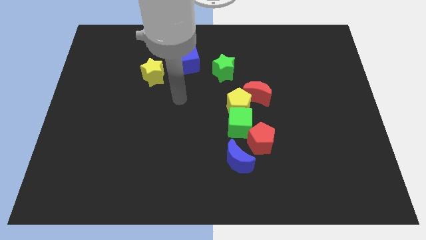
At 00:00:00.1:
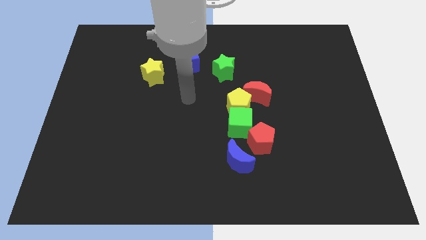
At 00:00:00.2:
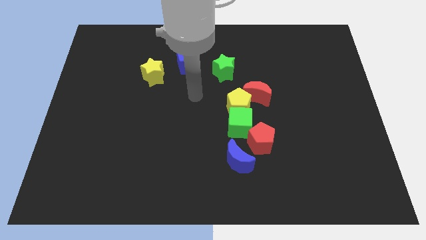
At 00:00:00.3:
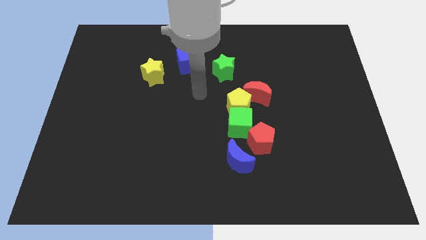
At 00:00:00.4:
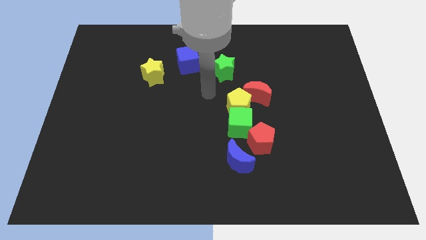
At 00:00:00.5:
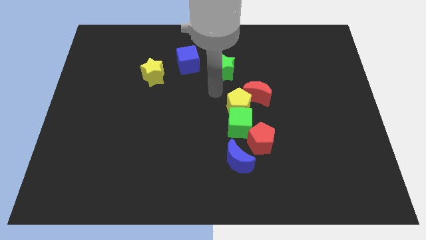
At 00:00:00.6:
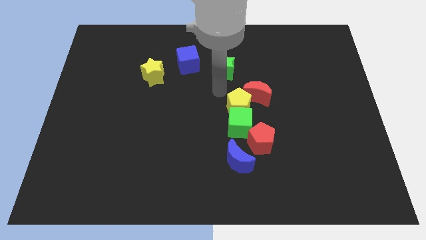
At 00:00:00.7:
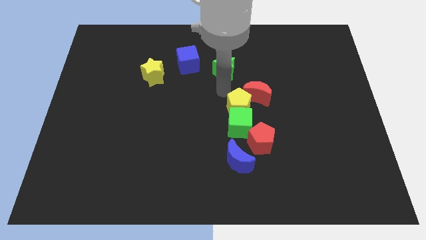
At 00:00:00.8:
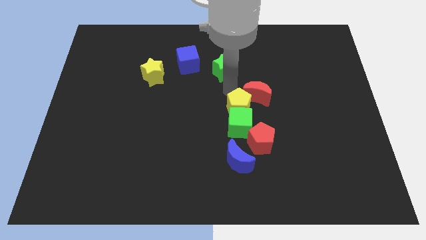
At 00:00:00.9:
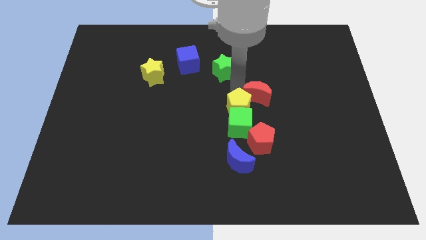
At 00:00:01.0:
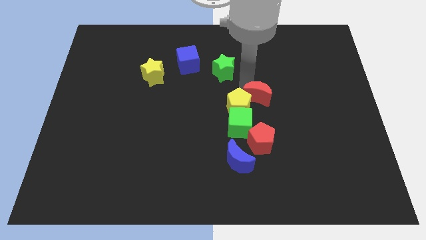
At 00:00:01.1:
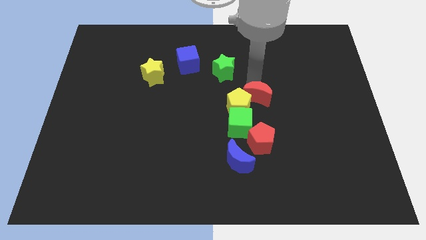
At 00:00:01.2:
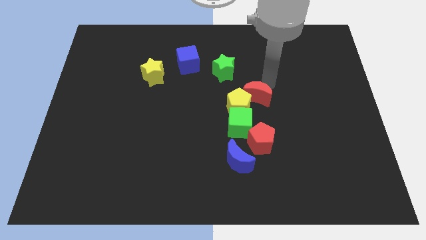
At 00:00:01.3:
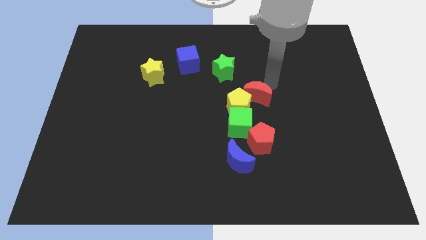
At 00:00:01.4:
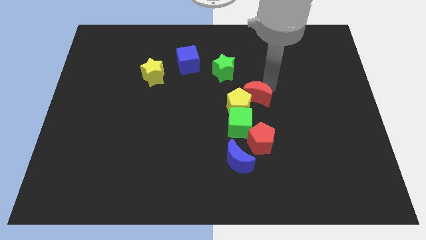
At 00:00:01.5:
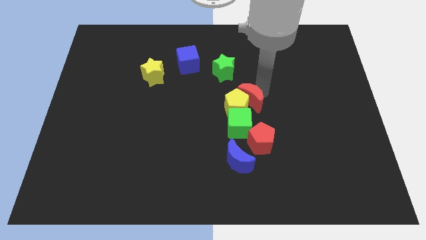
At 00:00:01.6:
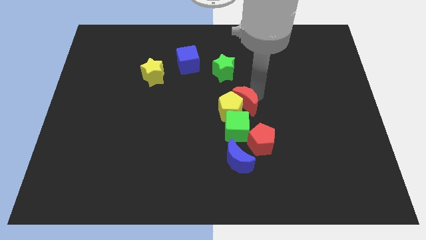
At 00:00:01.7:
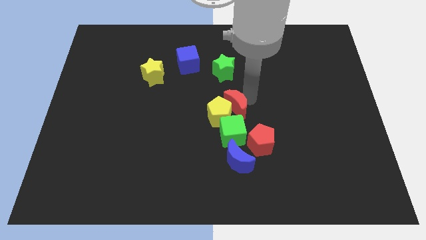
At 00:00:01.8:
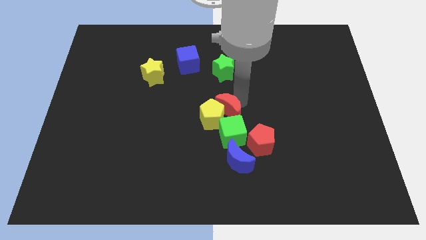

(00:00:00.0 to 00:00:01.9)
push the red moon into the yellow pentagon

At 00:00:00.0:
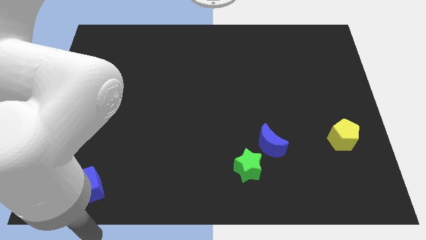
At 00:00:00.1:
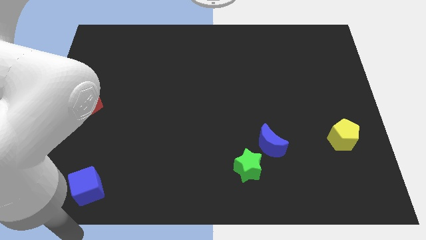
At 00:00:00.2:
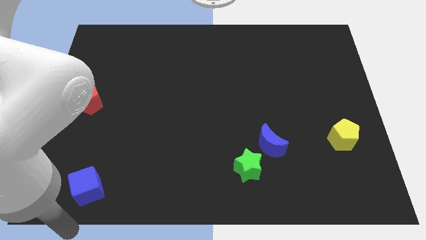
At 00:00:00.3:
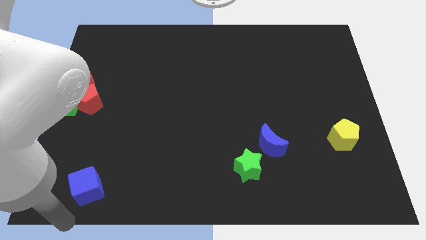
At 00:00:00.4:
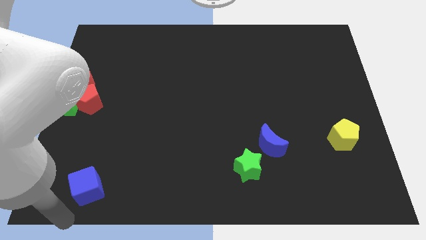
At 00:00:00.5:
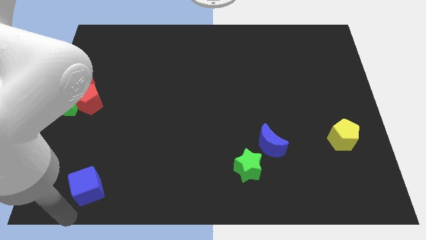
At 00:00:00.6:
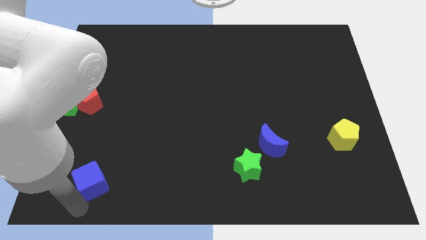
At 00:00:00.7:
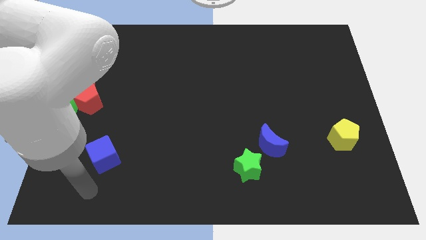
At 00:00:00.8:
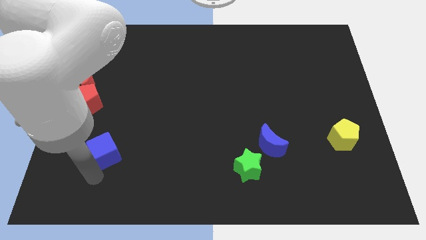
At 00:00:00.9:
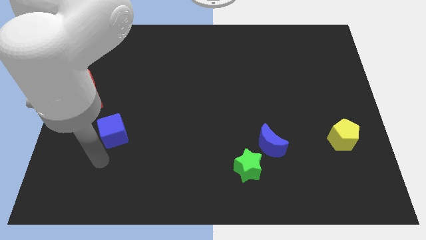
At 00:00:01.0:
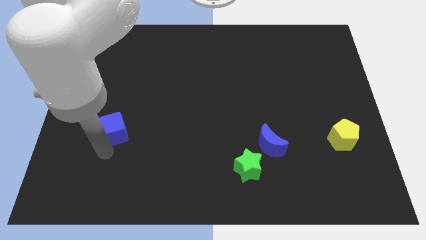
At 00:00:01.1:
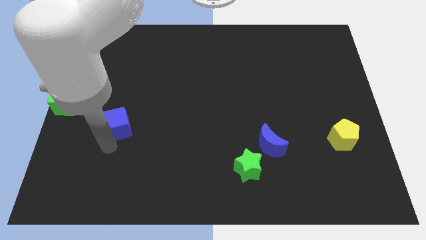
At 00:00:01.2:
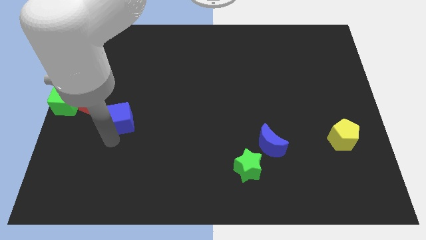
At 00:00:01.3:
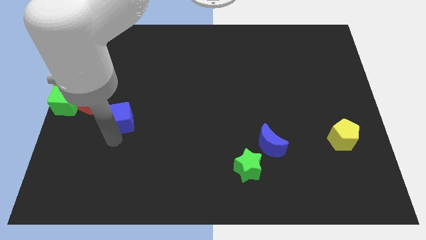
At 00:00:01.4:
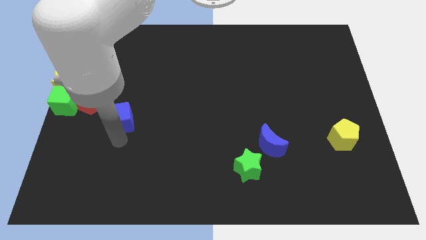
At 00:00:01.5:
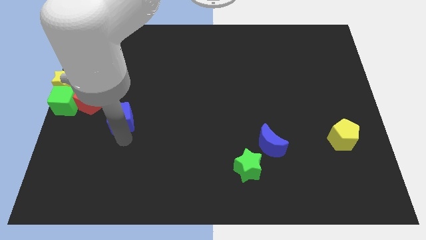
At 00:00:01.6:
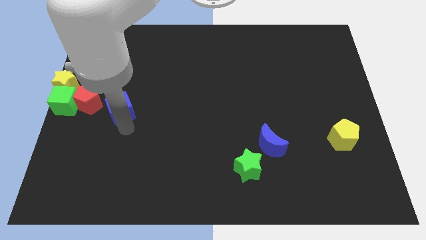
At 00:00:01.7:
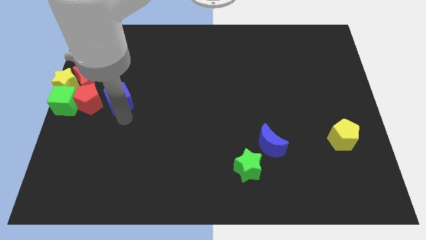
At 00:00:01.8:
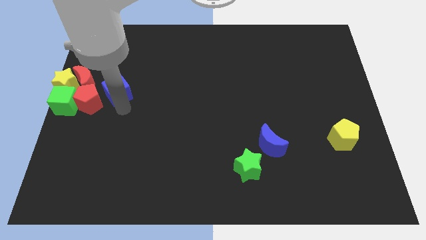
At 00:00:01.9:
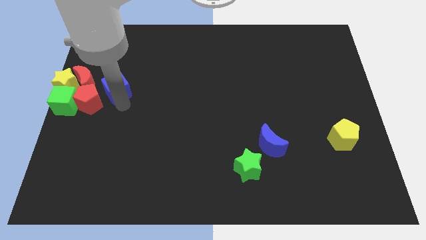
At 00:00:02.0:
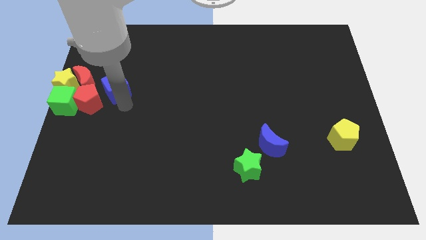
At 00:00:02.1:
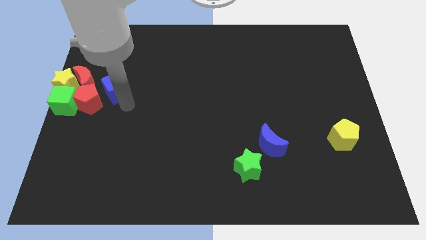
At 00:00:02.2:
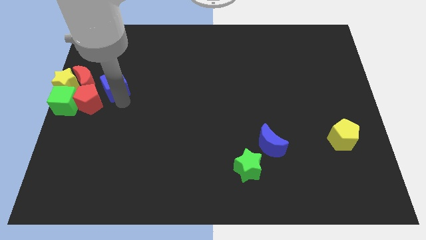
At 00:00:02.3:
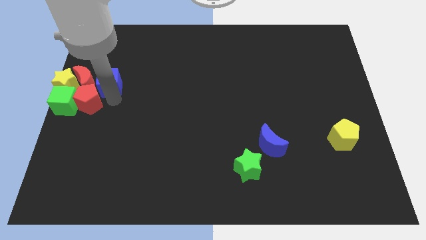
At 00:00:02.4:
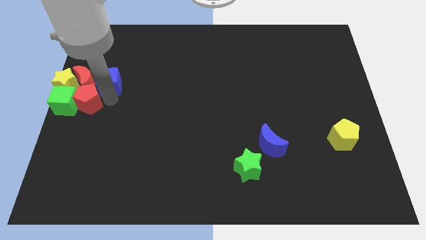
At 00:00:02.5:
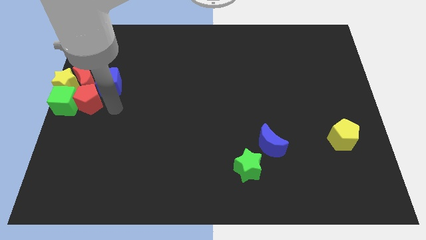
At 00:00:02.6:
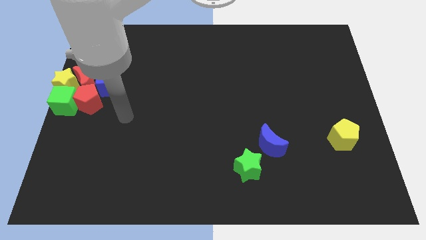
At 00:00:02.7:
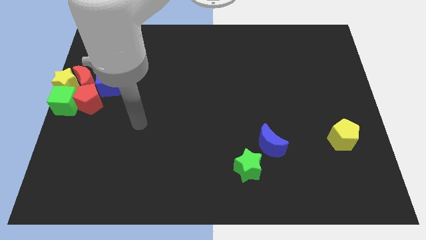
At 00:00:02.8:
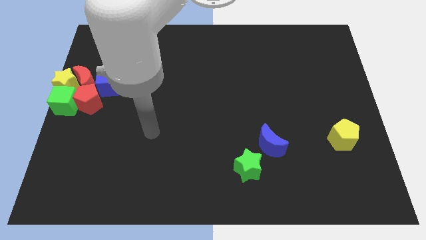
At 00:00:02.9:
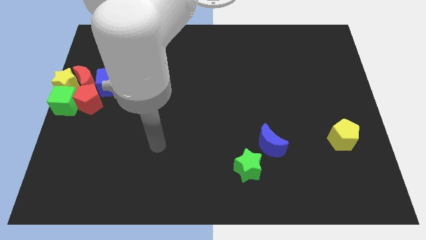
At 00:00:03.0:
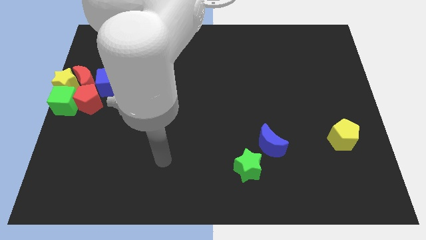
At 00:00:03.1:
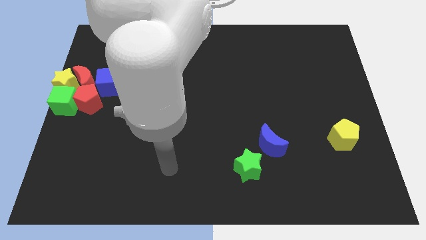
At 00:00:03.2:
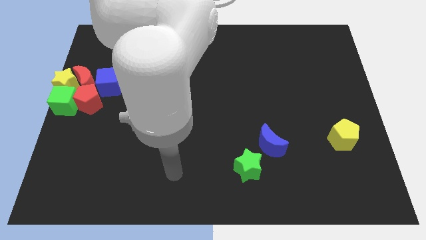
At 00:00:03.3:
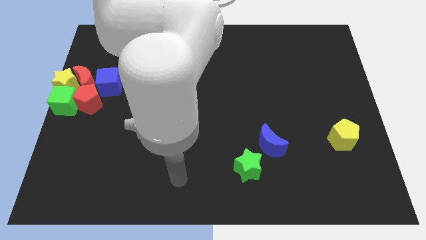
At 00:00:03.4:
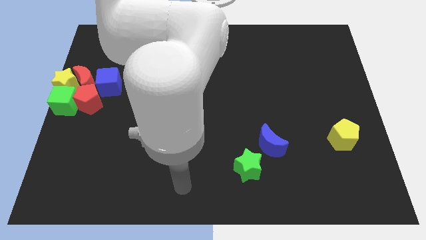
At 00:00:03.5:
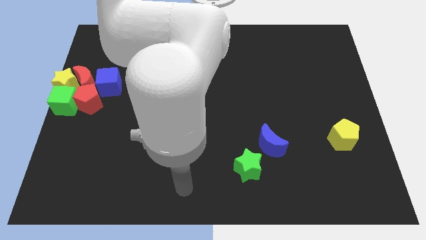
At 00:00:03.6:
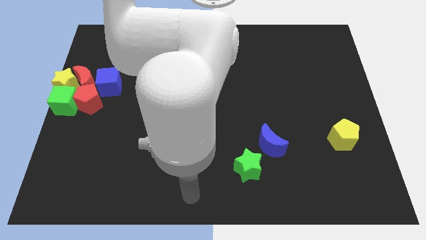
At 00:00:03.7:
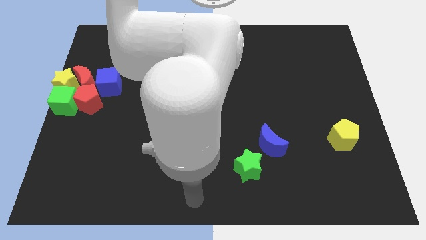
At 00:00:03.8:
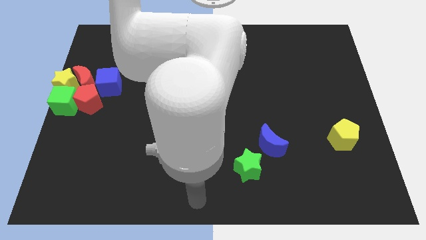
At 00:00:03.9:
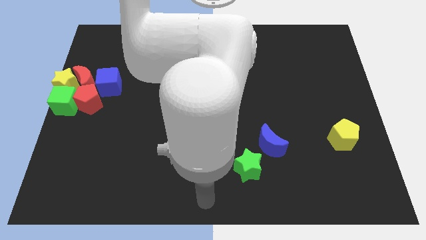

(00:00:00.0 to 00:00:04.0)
move the blue cube towards the group of blocks

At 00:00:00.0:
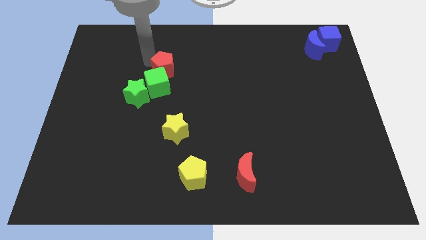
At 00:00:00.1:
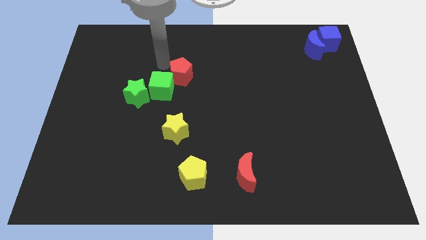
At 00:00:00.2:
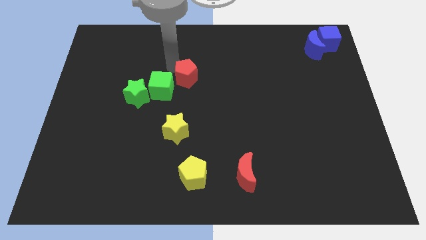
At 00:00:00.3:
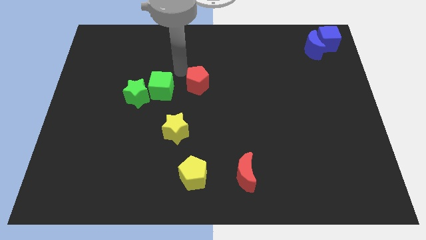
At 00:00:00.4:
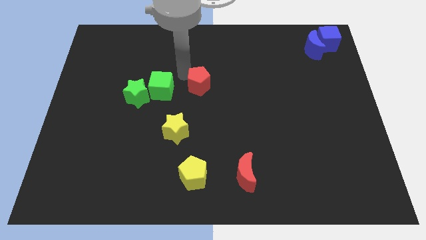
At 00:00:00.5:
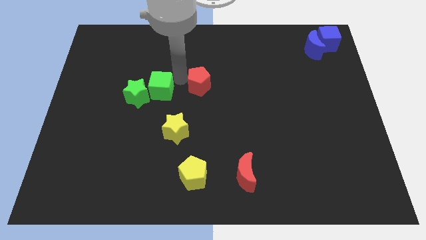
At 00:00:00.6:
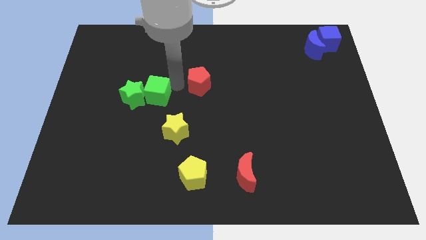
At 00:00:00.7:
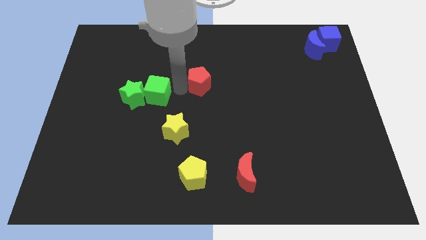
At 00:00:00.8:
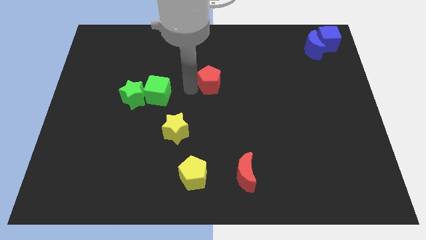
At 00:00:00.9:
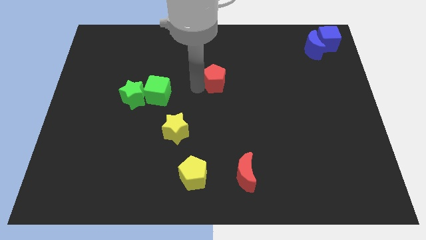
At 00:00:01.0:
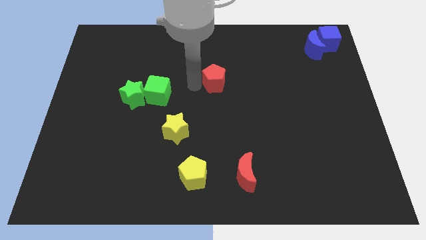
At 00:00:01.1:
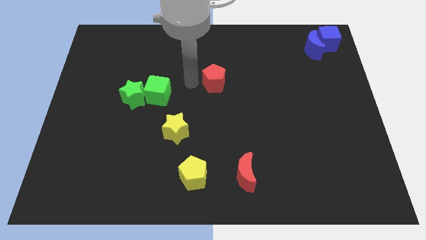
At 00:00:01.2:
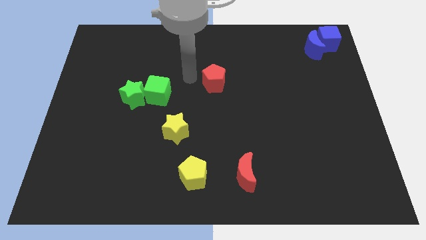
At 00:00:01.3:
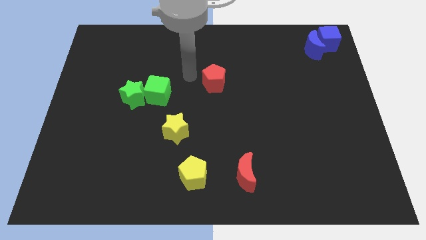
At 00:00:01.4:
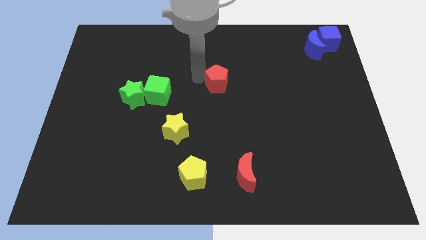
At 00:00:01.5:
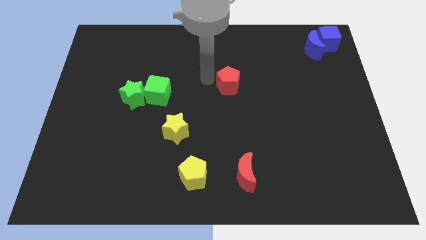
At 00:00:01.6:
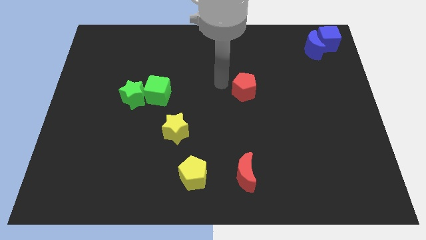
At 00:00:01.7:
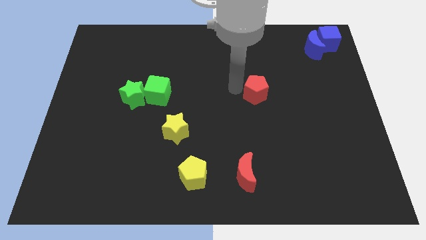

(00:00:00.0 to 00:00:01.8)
place red pentagon above red crescent

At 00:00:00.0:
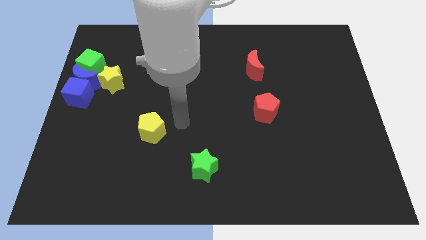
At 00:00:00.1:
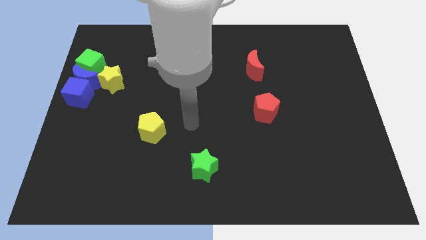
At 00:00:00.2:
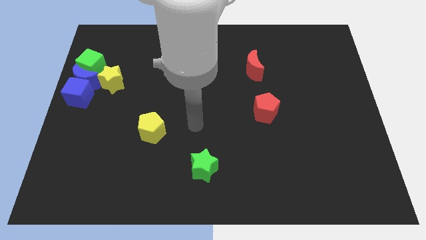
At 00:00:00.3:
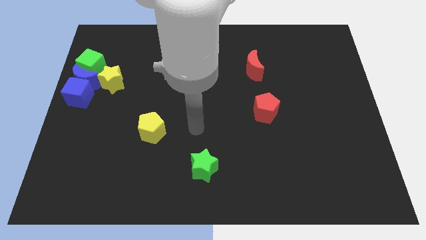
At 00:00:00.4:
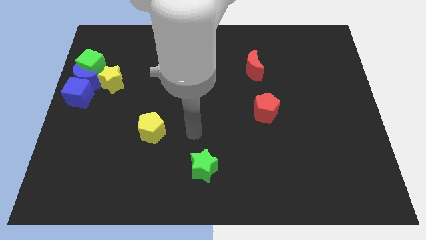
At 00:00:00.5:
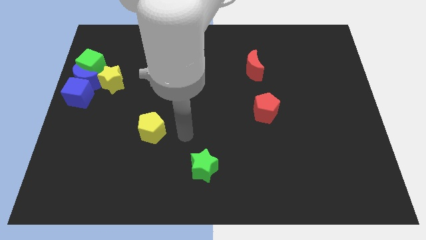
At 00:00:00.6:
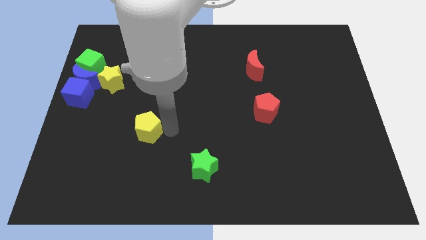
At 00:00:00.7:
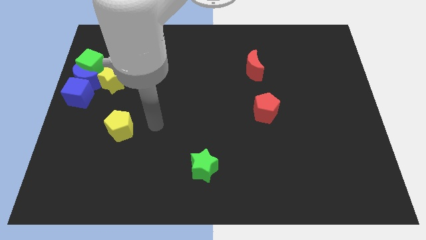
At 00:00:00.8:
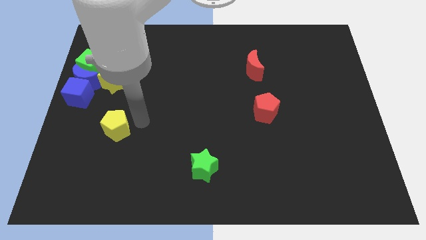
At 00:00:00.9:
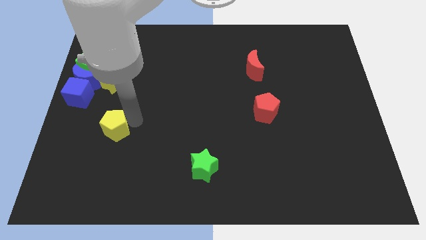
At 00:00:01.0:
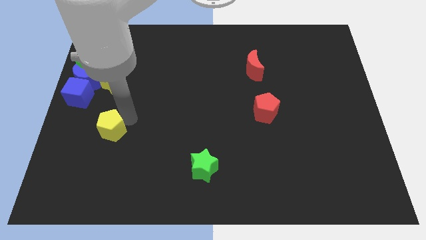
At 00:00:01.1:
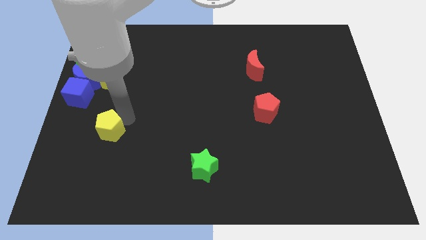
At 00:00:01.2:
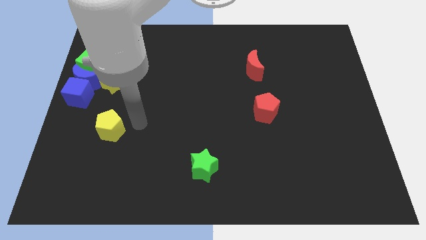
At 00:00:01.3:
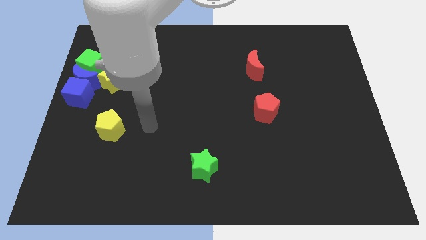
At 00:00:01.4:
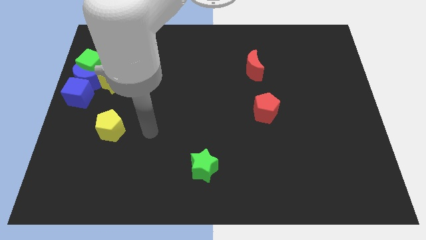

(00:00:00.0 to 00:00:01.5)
place the yellow pentagon vertically below the yellow star
